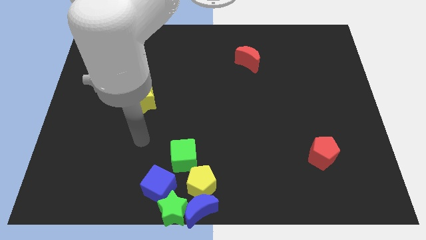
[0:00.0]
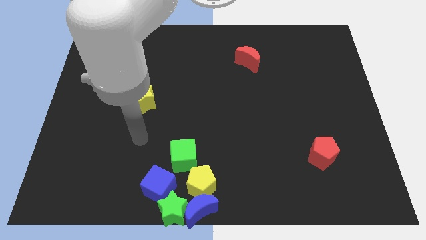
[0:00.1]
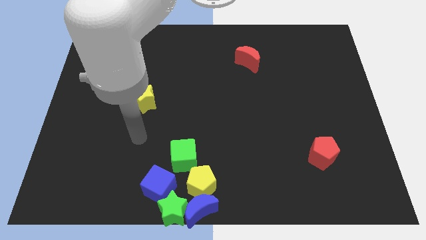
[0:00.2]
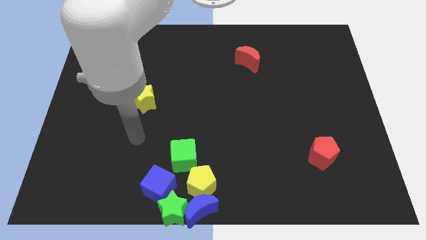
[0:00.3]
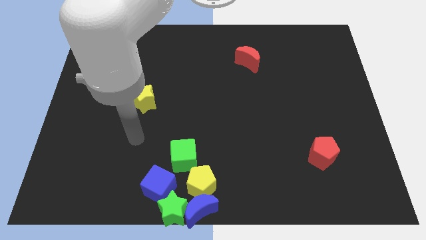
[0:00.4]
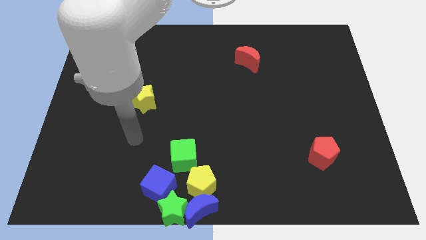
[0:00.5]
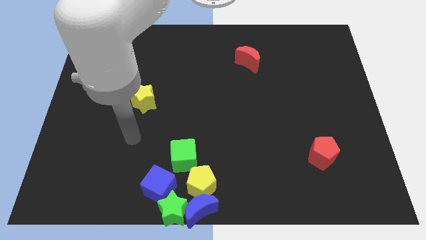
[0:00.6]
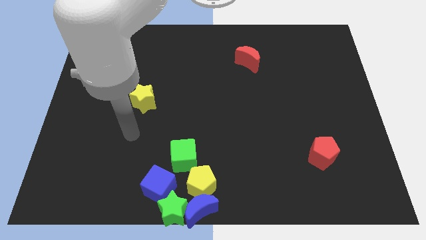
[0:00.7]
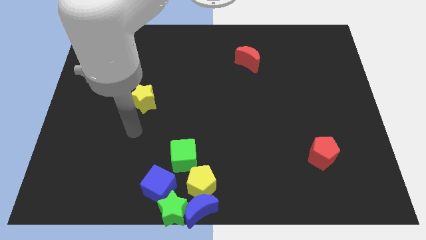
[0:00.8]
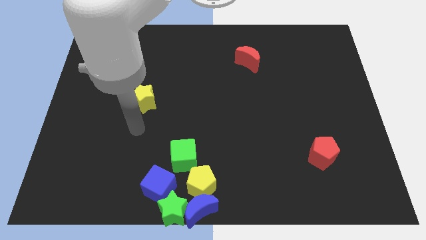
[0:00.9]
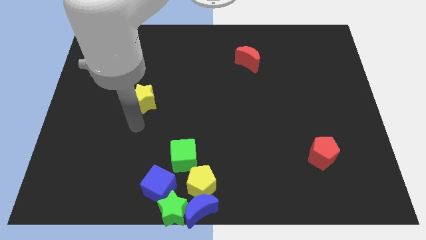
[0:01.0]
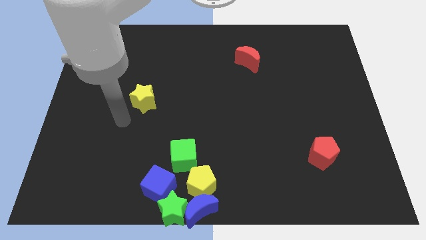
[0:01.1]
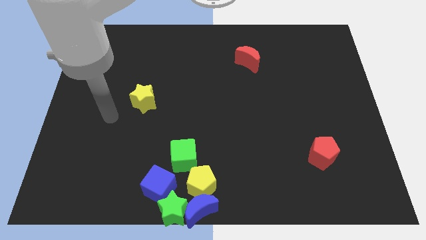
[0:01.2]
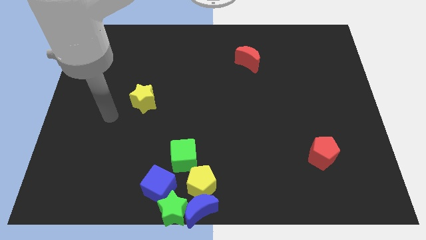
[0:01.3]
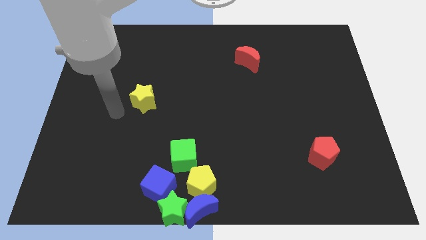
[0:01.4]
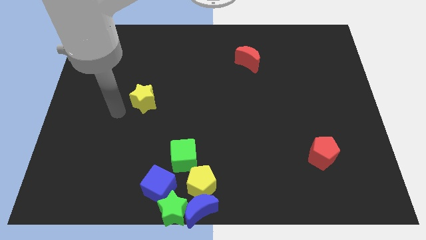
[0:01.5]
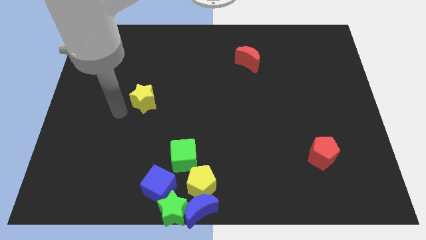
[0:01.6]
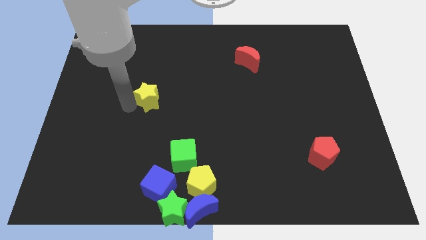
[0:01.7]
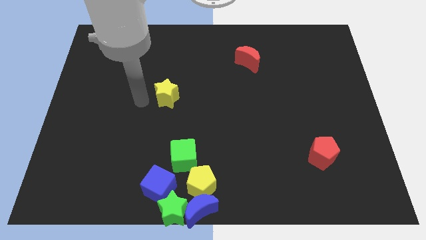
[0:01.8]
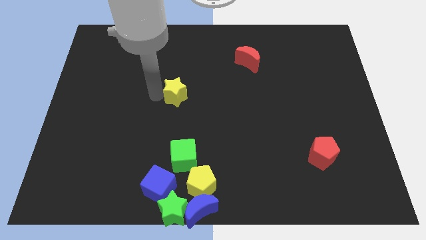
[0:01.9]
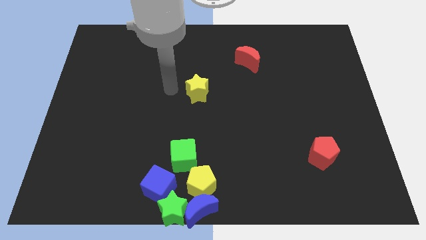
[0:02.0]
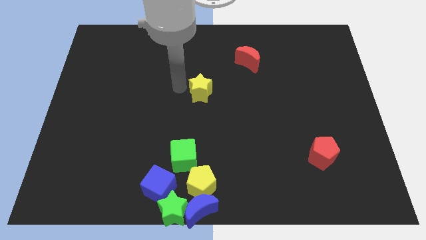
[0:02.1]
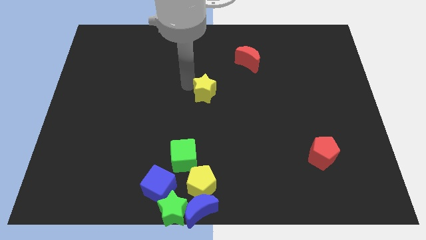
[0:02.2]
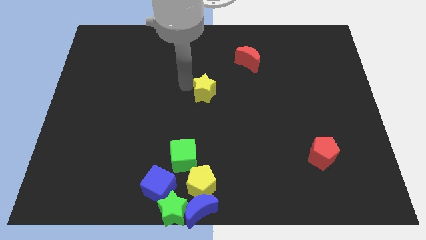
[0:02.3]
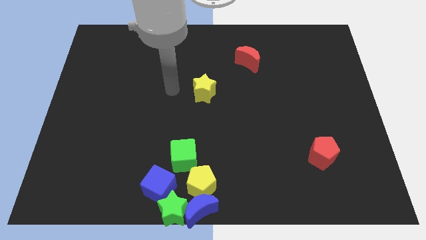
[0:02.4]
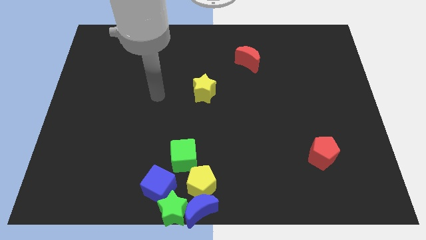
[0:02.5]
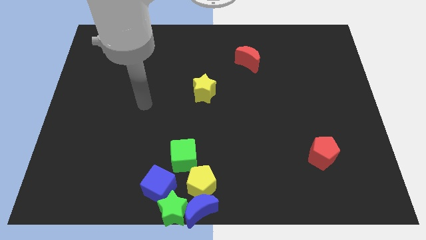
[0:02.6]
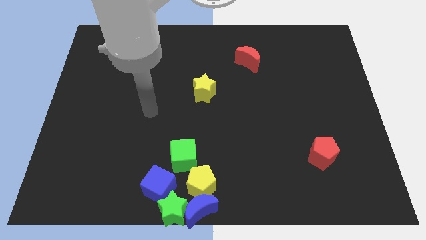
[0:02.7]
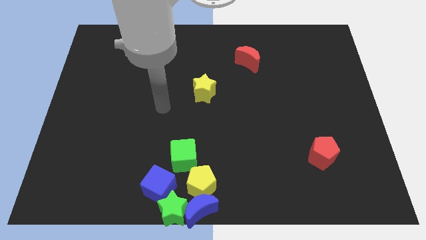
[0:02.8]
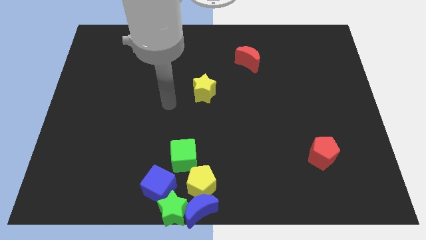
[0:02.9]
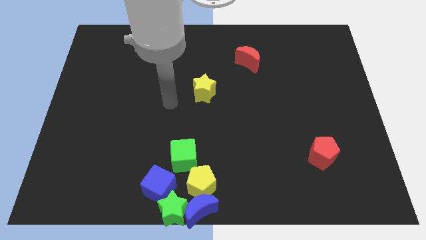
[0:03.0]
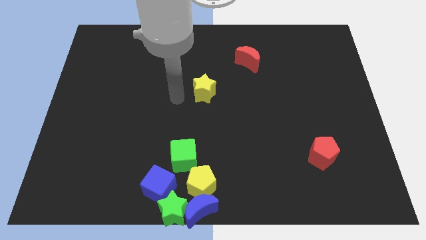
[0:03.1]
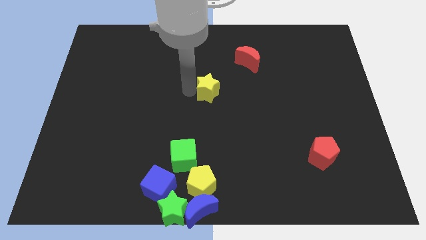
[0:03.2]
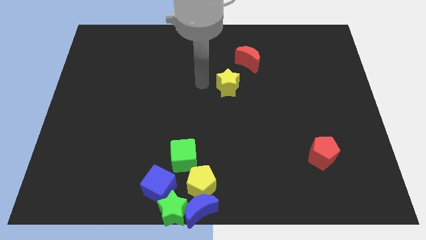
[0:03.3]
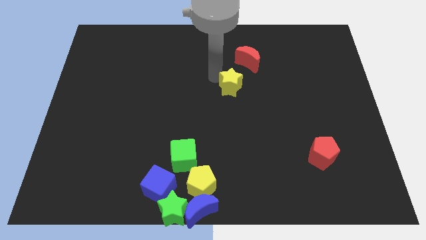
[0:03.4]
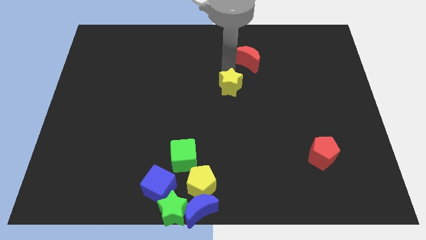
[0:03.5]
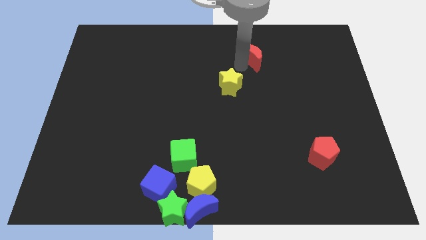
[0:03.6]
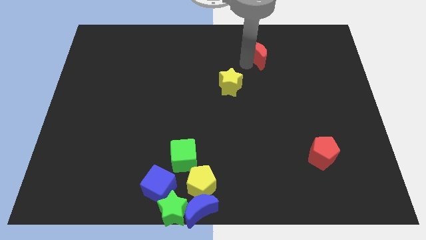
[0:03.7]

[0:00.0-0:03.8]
move yellow star diagonally below the red moon

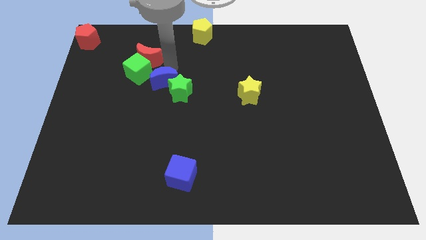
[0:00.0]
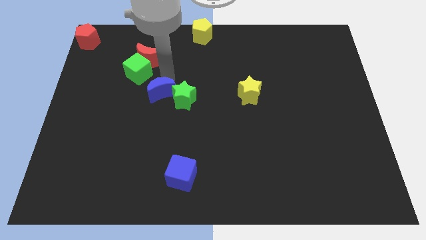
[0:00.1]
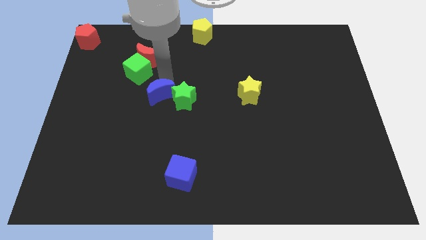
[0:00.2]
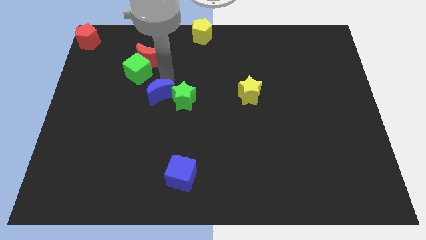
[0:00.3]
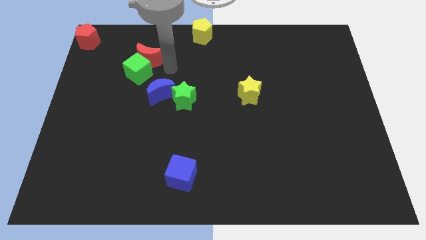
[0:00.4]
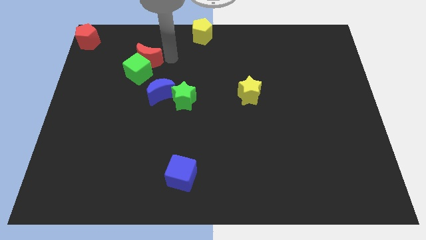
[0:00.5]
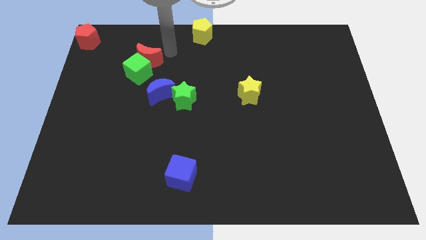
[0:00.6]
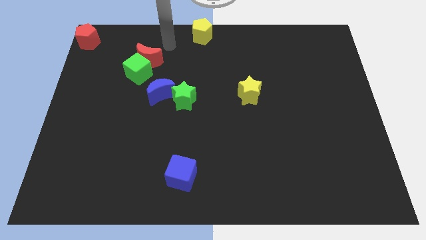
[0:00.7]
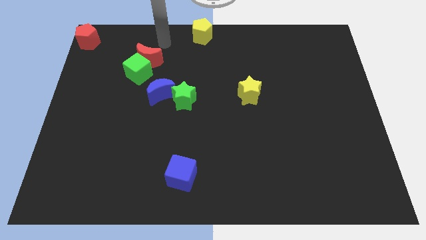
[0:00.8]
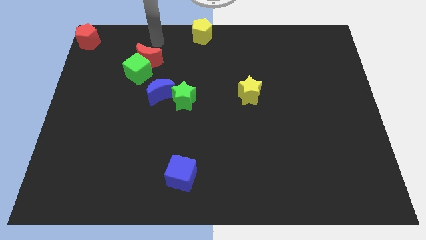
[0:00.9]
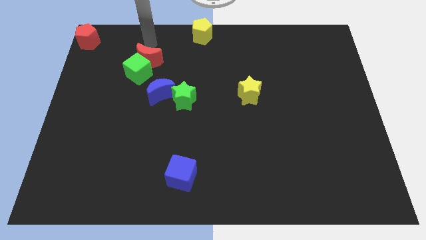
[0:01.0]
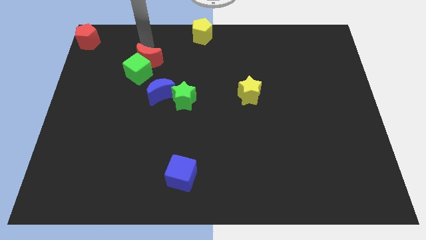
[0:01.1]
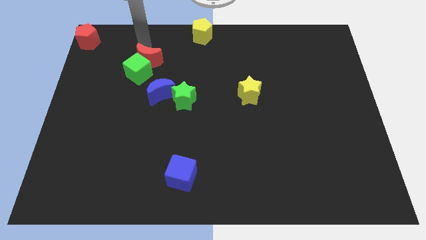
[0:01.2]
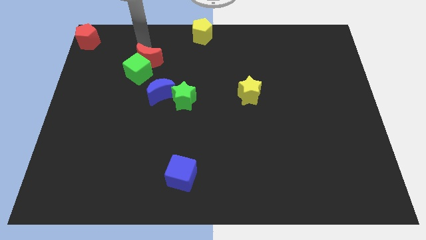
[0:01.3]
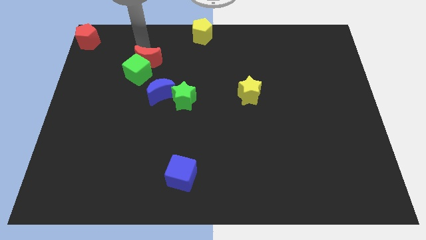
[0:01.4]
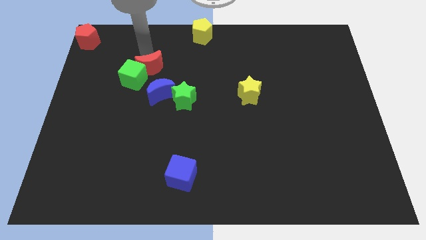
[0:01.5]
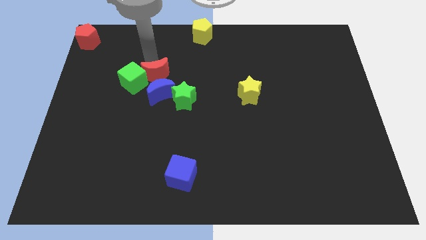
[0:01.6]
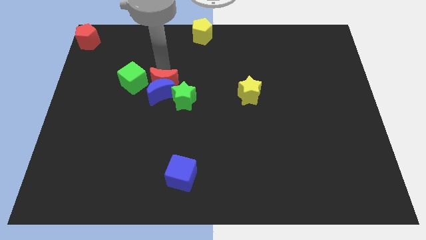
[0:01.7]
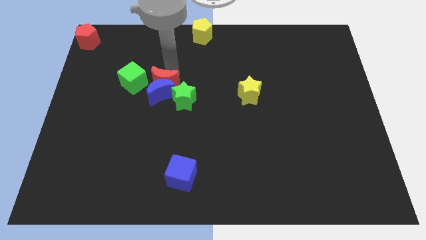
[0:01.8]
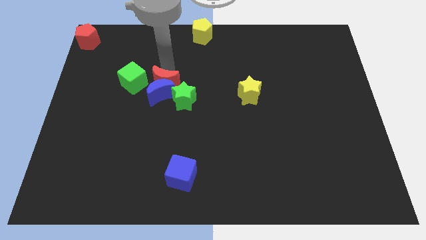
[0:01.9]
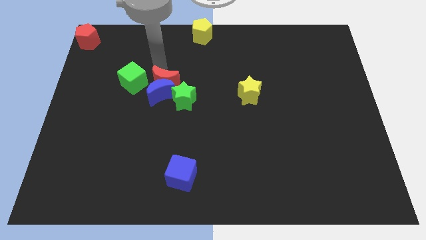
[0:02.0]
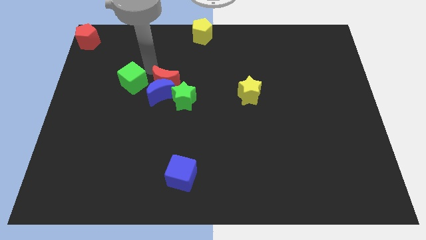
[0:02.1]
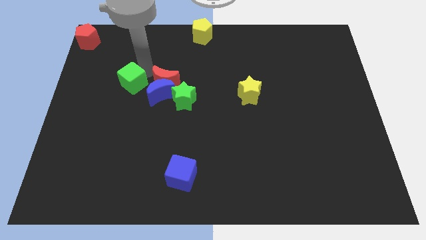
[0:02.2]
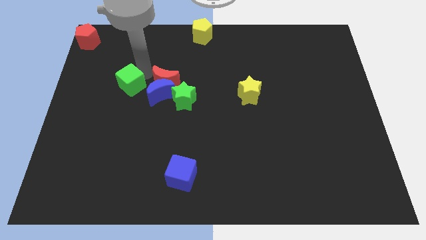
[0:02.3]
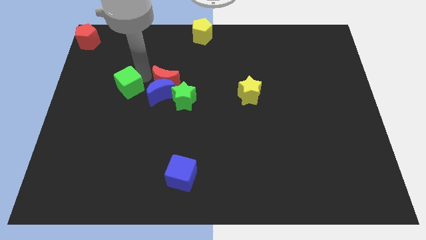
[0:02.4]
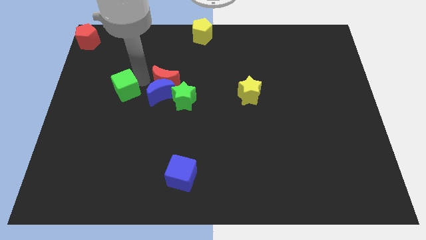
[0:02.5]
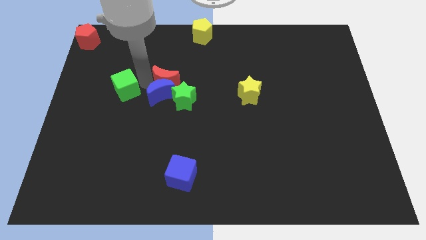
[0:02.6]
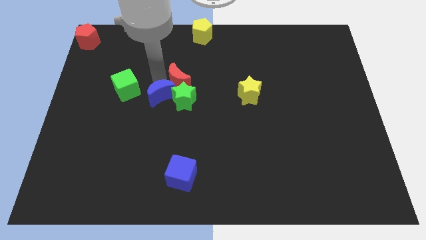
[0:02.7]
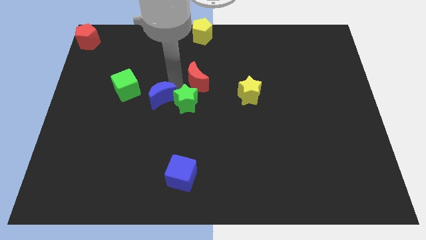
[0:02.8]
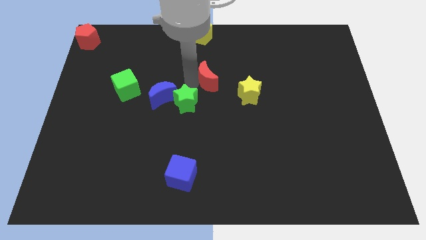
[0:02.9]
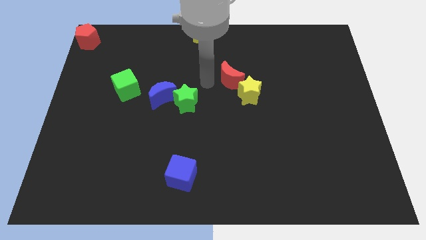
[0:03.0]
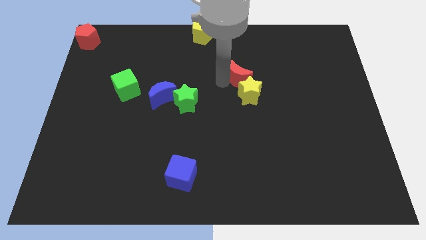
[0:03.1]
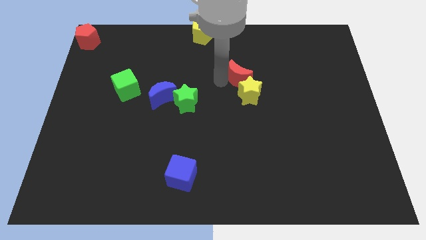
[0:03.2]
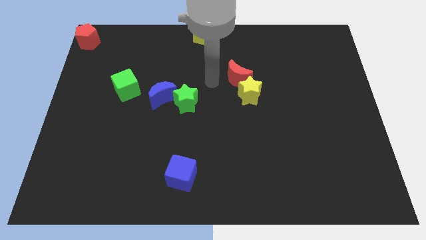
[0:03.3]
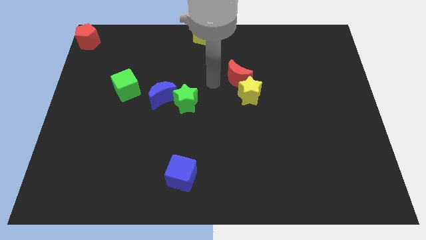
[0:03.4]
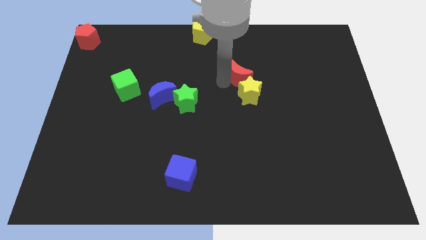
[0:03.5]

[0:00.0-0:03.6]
move the red crescent above the yellow star

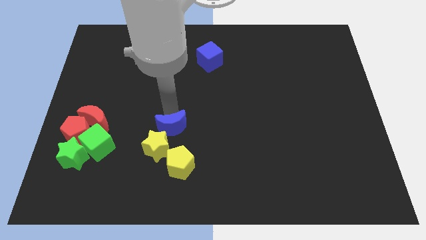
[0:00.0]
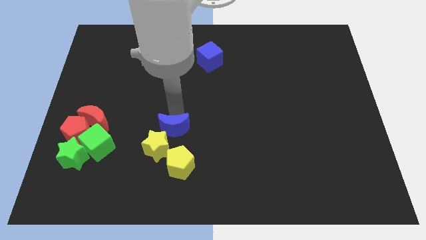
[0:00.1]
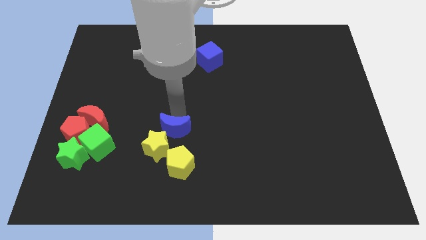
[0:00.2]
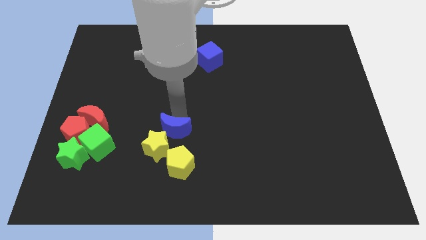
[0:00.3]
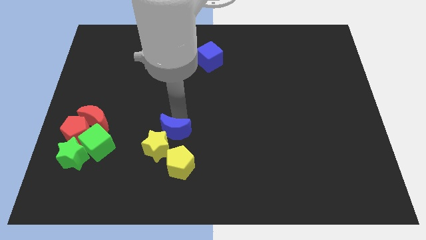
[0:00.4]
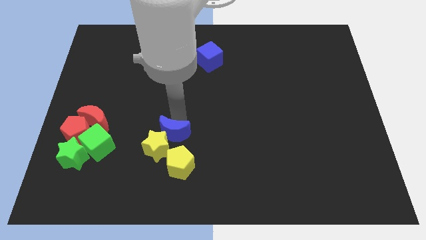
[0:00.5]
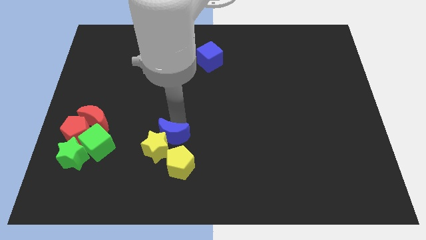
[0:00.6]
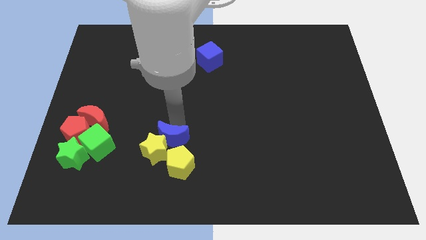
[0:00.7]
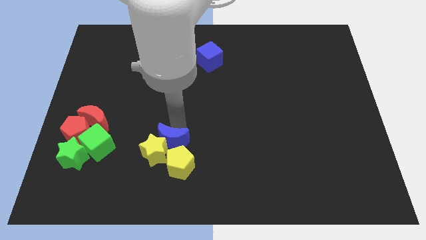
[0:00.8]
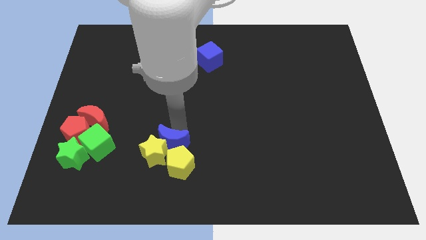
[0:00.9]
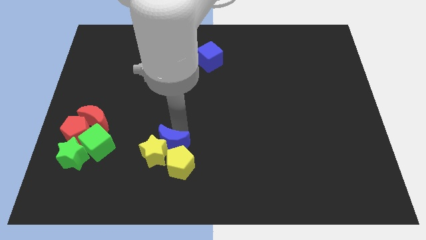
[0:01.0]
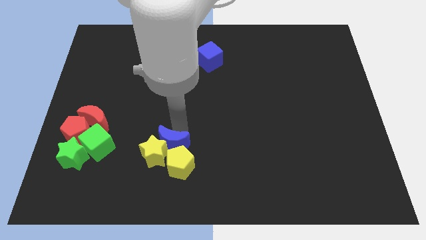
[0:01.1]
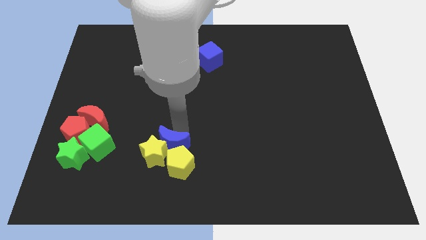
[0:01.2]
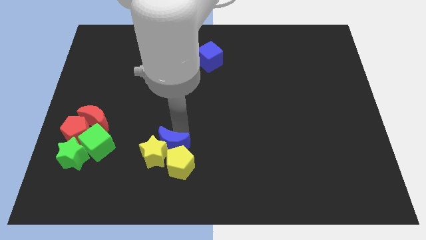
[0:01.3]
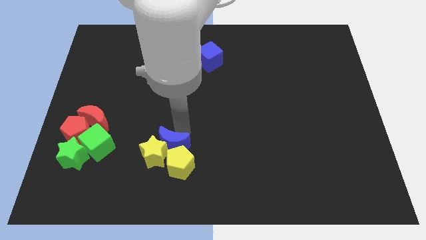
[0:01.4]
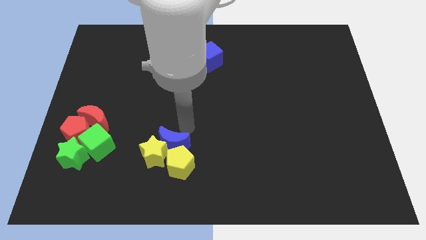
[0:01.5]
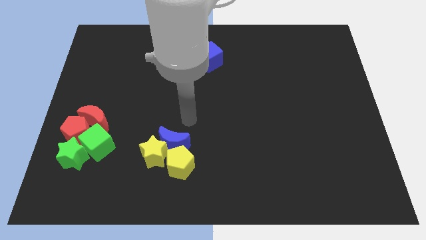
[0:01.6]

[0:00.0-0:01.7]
move the blue crescent into the top of the yellow star and yellow pentagon
